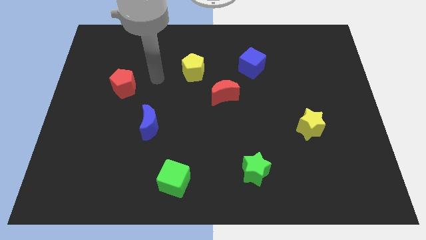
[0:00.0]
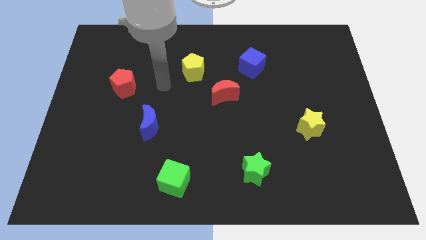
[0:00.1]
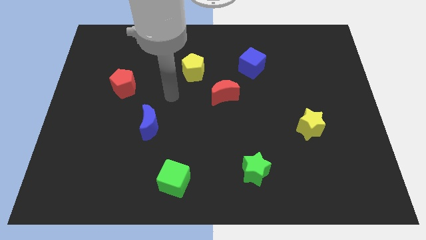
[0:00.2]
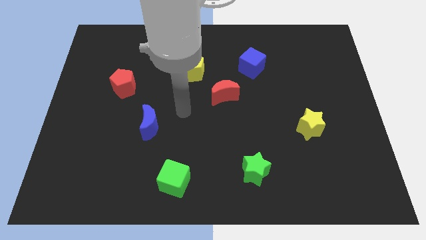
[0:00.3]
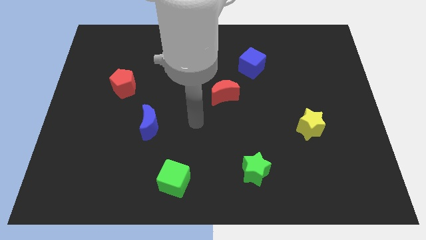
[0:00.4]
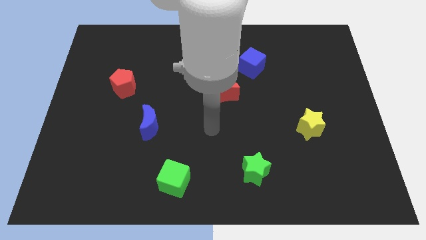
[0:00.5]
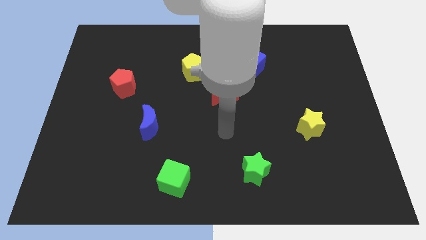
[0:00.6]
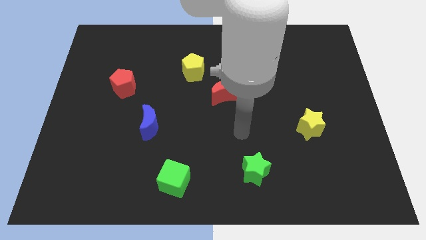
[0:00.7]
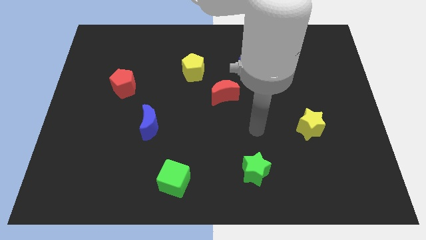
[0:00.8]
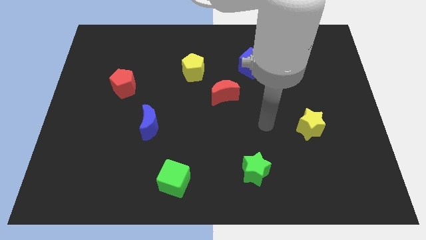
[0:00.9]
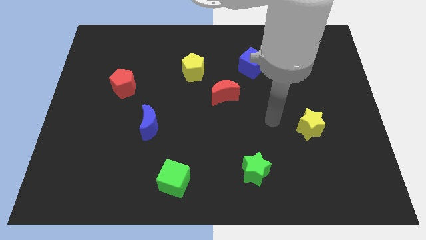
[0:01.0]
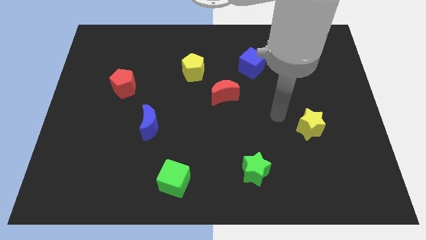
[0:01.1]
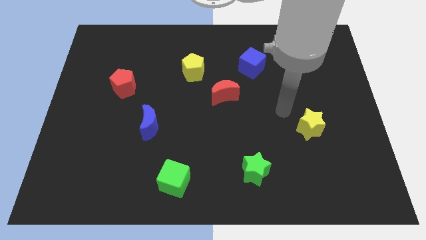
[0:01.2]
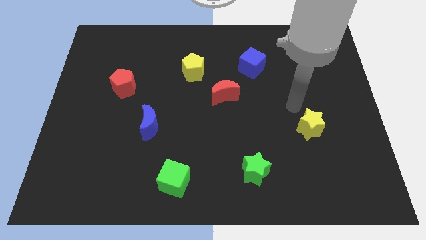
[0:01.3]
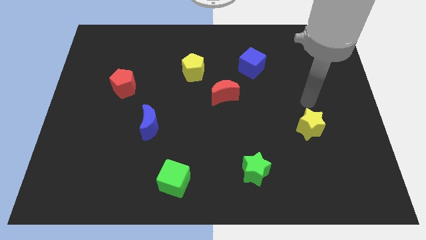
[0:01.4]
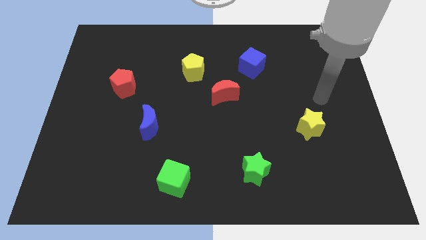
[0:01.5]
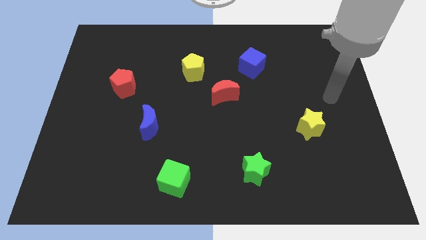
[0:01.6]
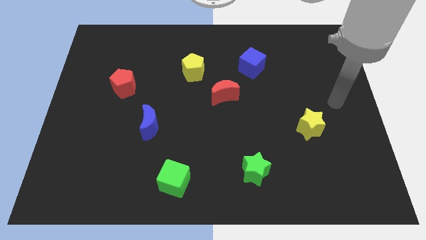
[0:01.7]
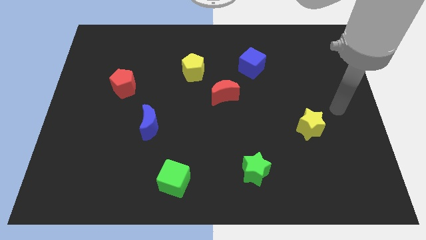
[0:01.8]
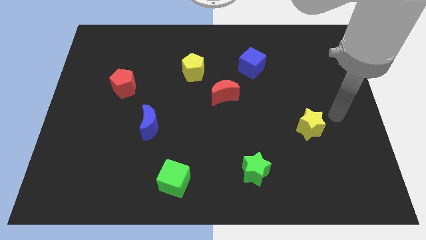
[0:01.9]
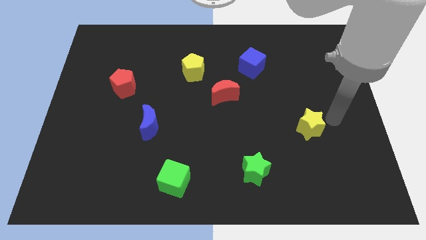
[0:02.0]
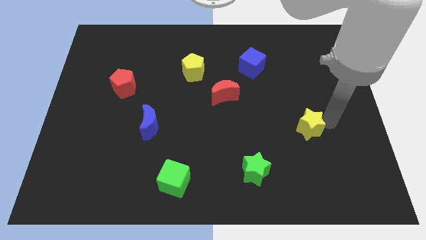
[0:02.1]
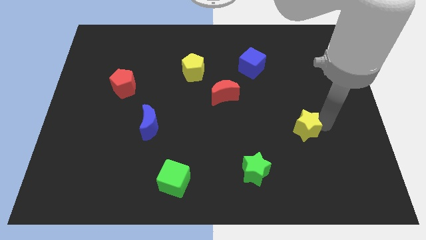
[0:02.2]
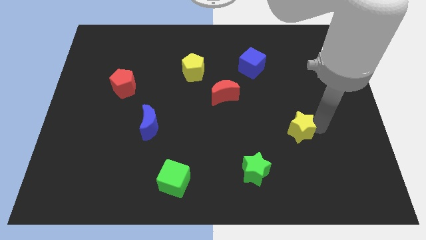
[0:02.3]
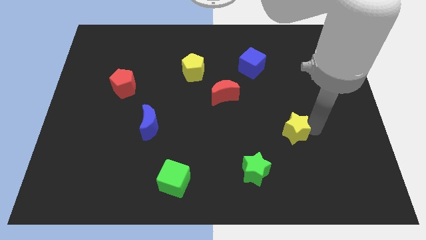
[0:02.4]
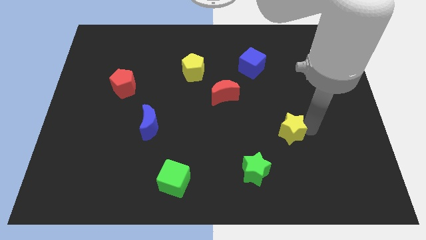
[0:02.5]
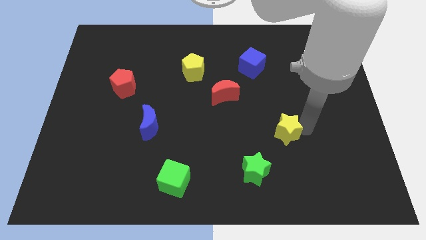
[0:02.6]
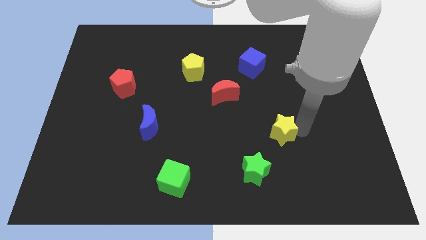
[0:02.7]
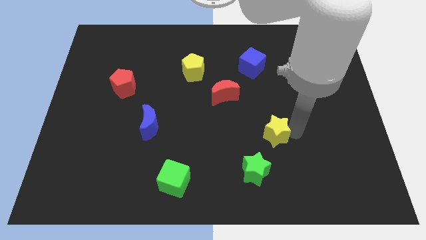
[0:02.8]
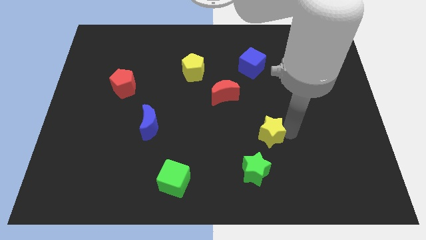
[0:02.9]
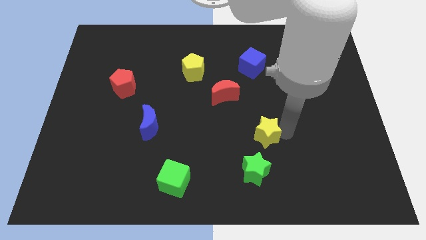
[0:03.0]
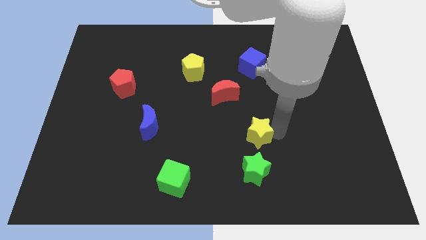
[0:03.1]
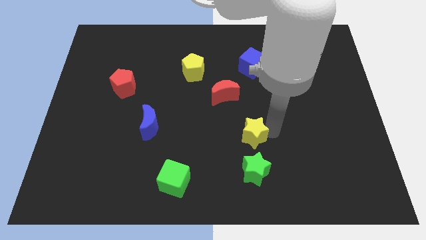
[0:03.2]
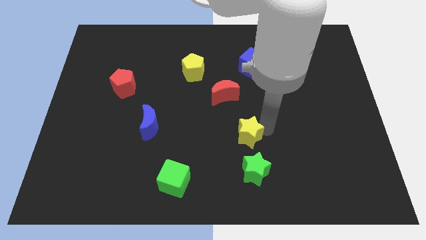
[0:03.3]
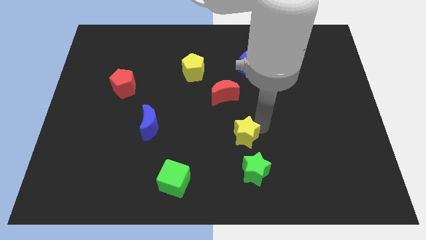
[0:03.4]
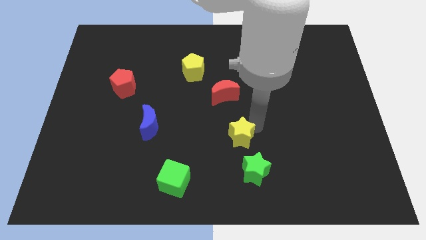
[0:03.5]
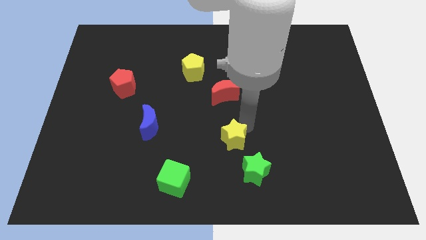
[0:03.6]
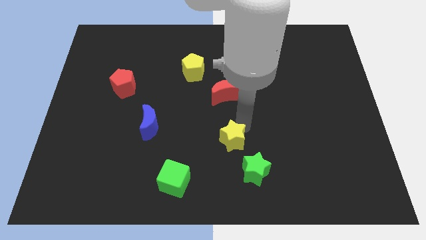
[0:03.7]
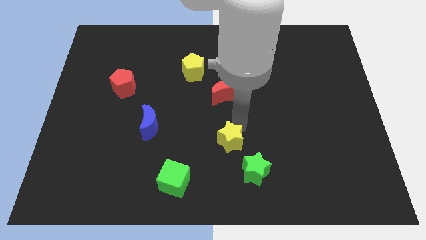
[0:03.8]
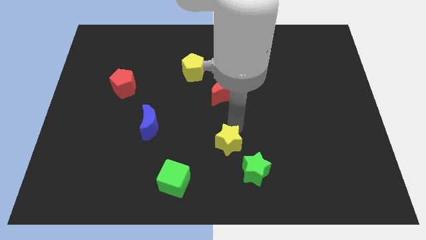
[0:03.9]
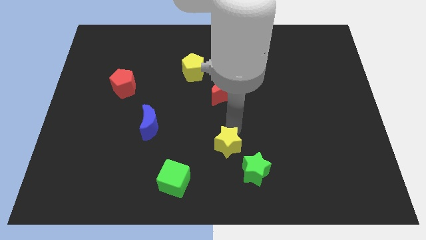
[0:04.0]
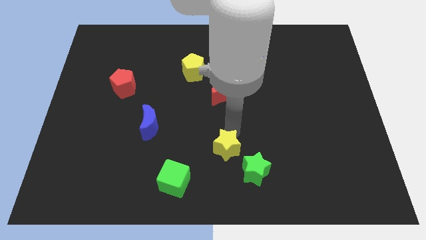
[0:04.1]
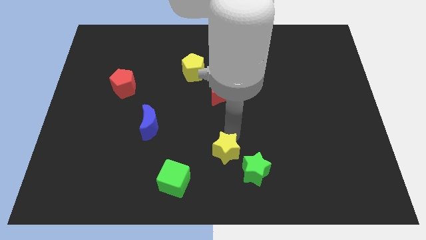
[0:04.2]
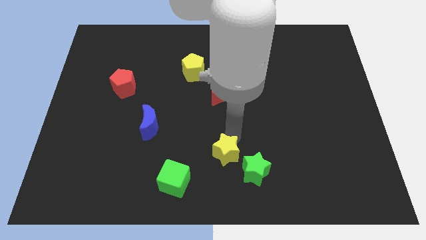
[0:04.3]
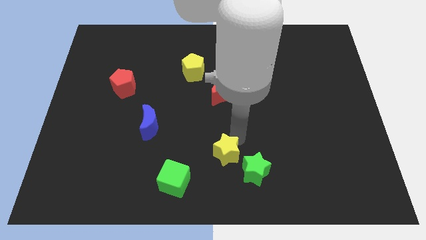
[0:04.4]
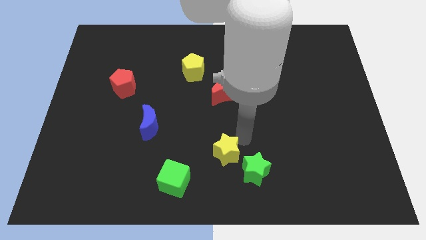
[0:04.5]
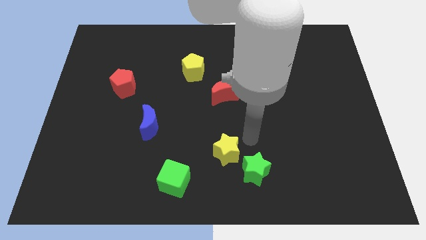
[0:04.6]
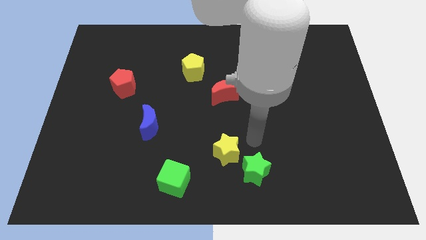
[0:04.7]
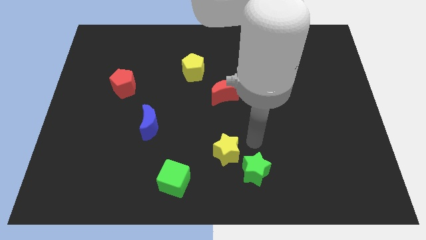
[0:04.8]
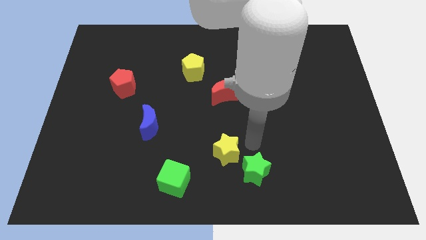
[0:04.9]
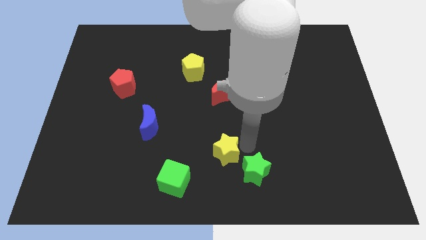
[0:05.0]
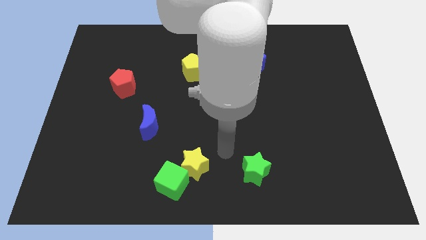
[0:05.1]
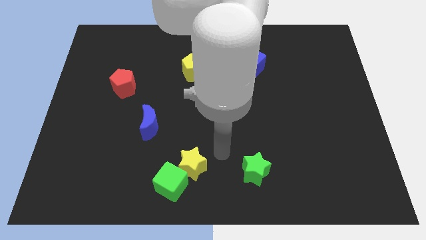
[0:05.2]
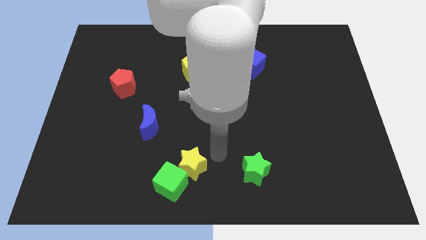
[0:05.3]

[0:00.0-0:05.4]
push the yellow star towards the green cube

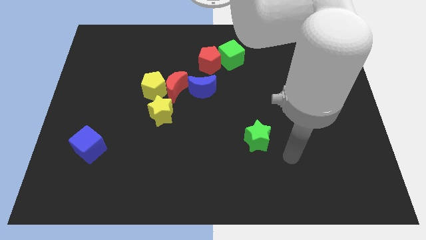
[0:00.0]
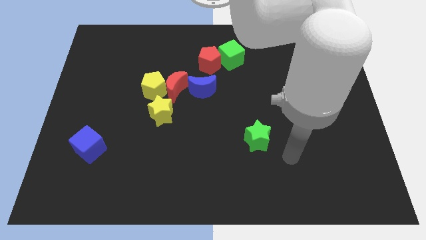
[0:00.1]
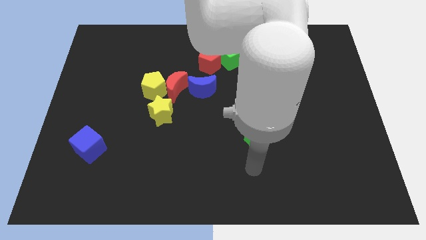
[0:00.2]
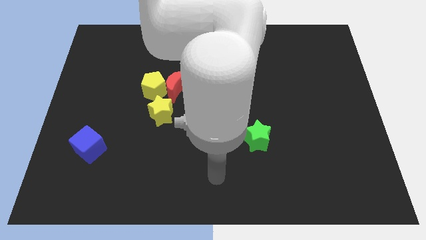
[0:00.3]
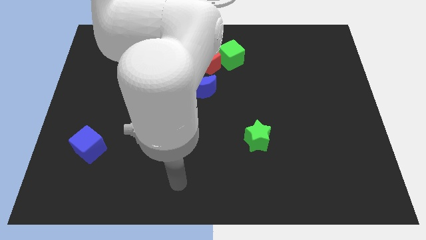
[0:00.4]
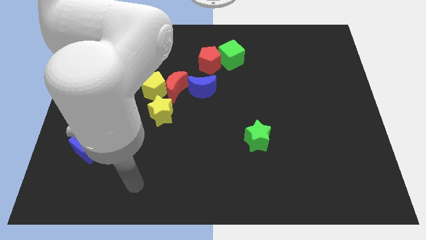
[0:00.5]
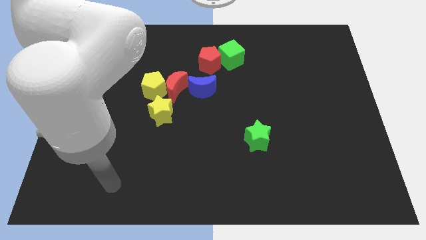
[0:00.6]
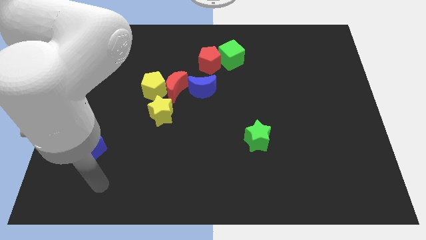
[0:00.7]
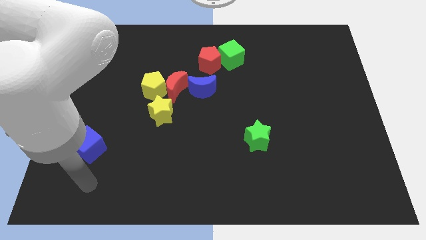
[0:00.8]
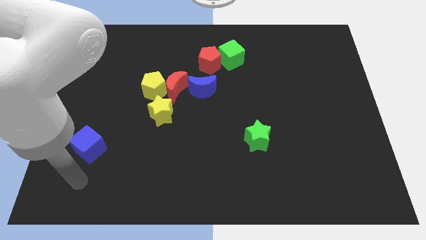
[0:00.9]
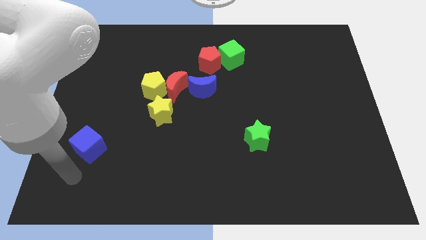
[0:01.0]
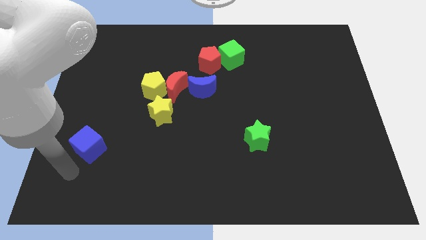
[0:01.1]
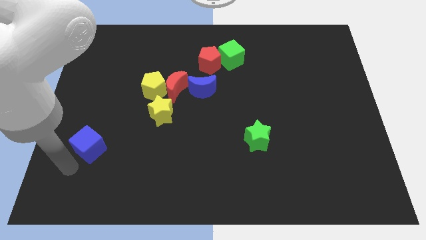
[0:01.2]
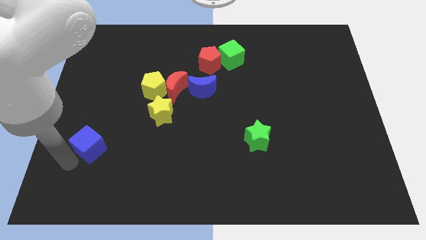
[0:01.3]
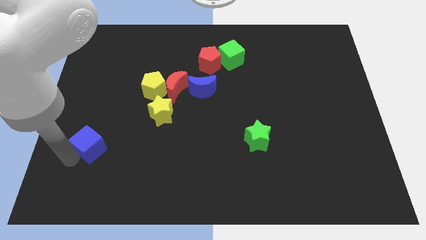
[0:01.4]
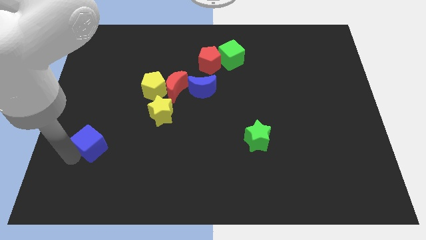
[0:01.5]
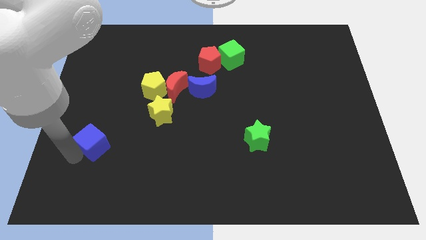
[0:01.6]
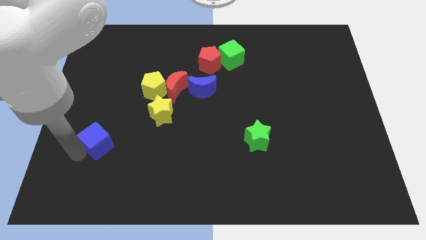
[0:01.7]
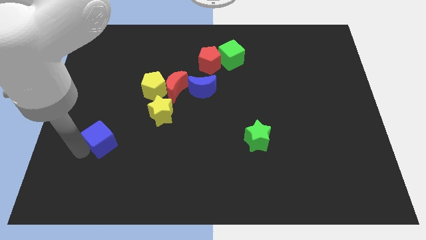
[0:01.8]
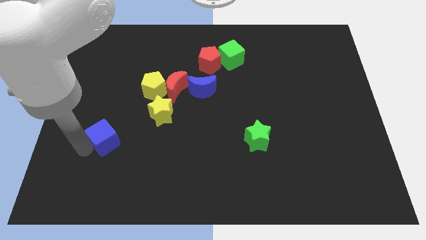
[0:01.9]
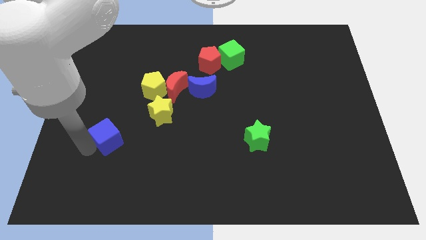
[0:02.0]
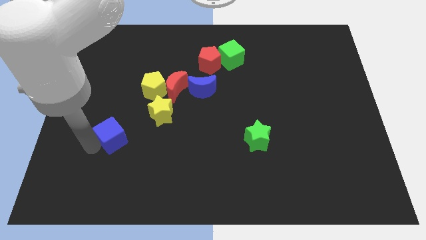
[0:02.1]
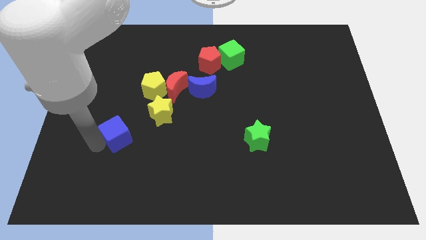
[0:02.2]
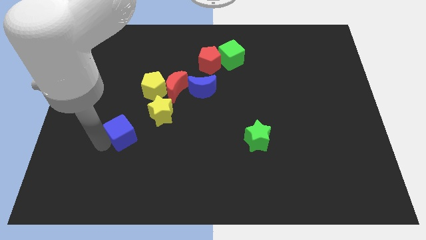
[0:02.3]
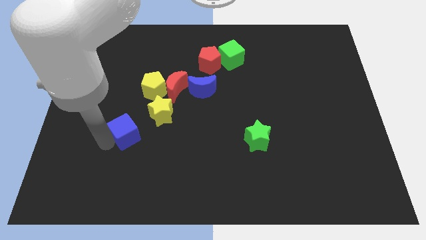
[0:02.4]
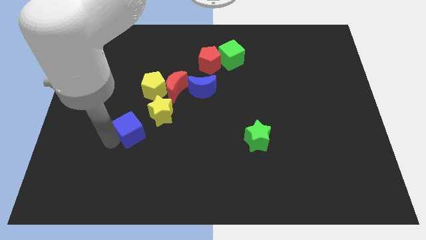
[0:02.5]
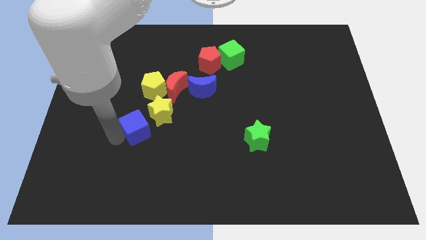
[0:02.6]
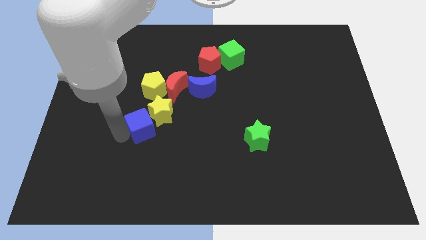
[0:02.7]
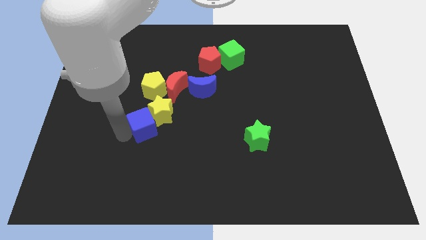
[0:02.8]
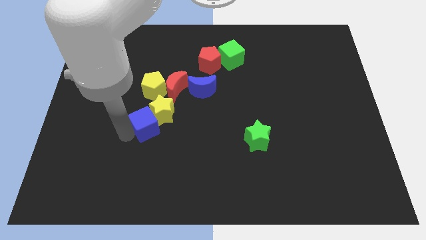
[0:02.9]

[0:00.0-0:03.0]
put the blue cube close to the yellow star
